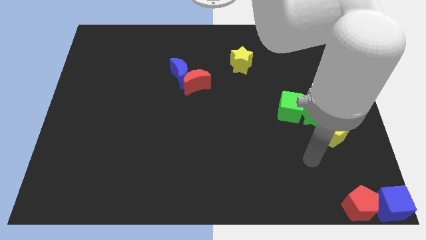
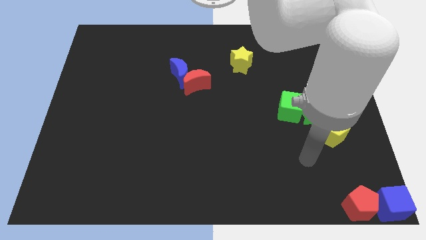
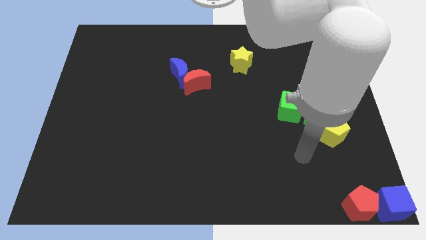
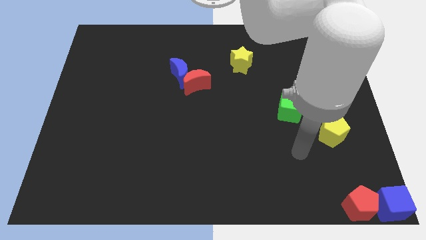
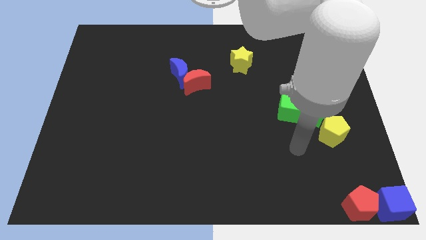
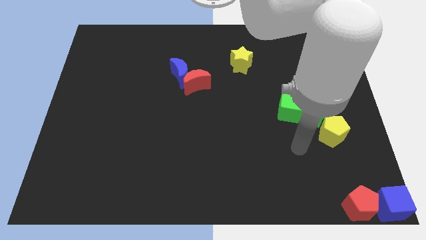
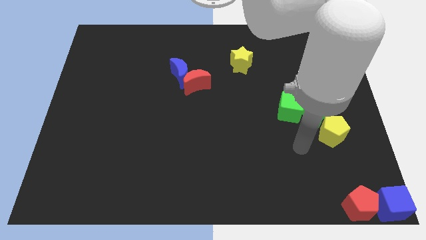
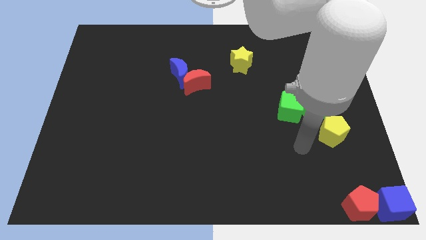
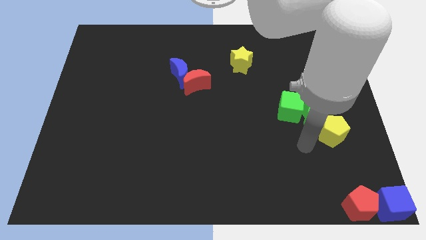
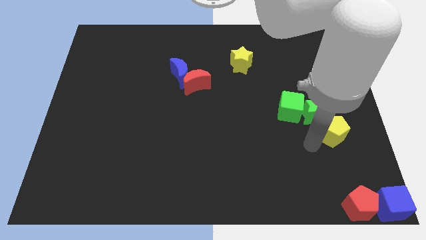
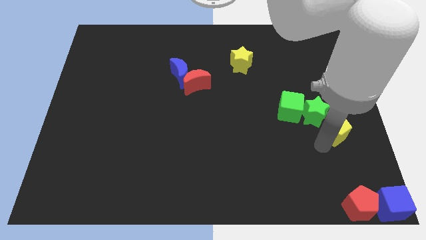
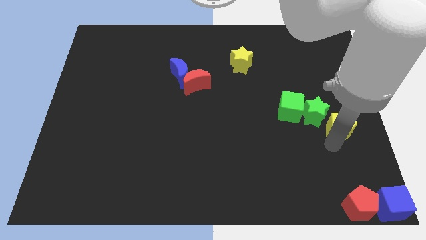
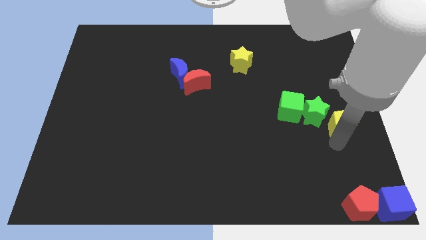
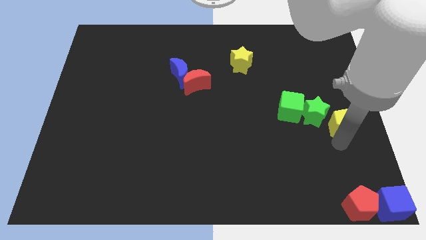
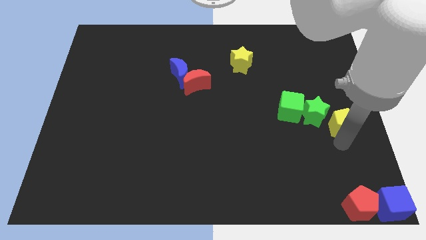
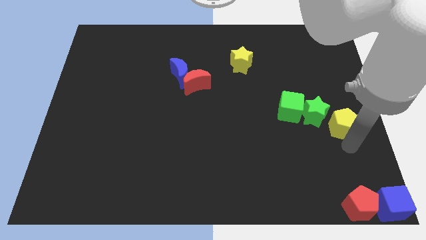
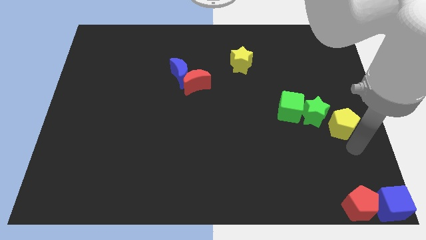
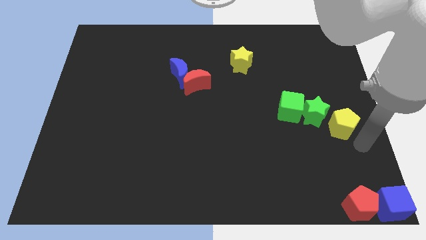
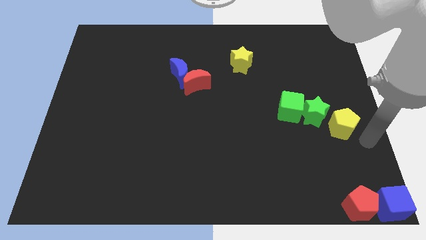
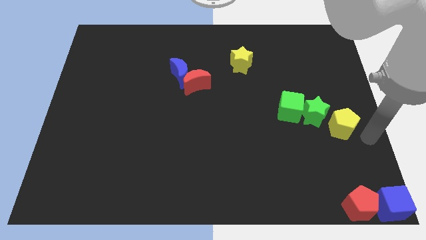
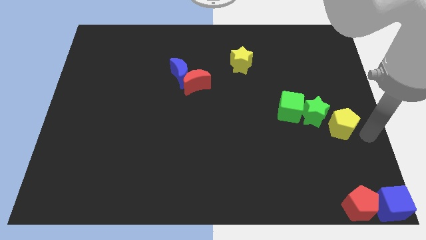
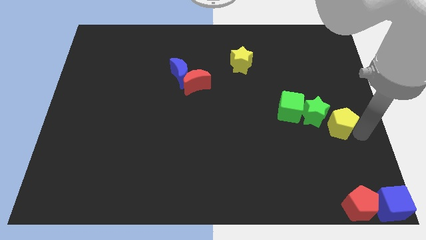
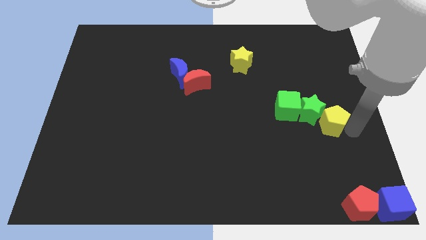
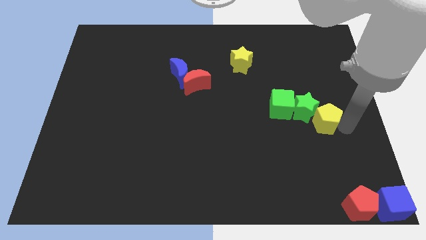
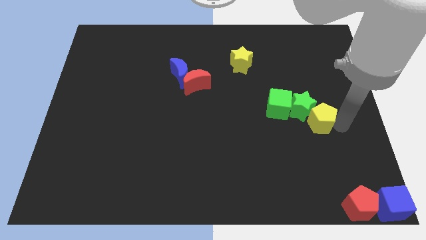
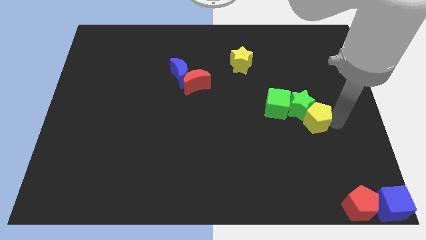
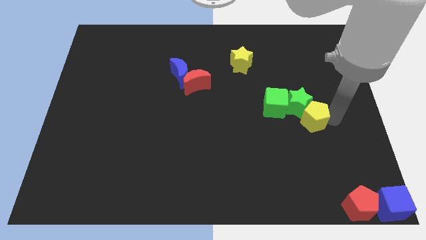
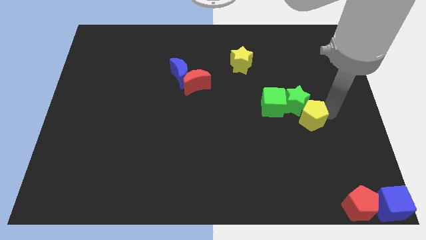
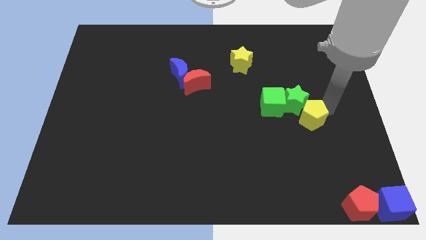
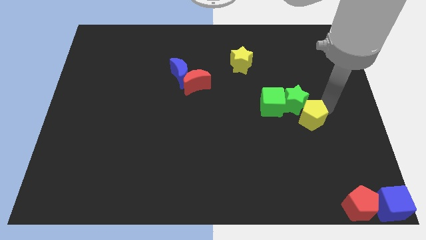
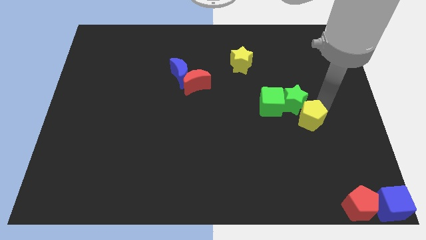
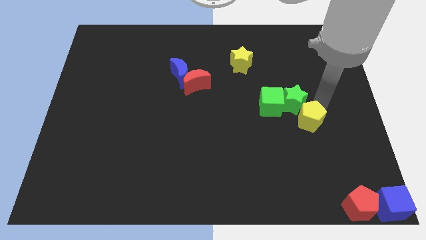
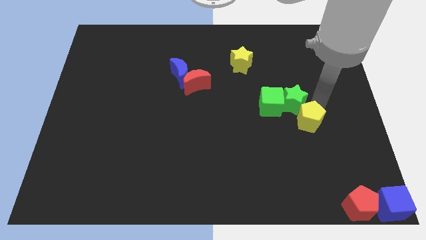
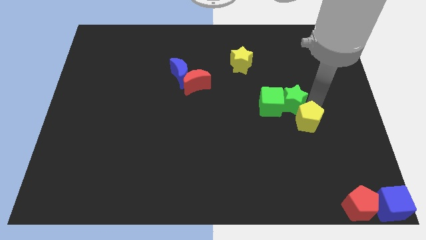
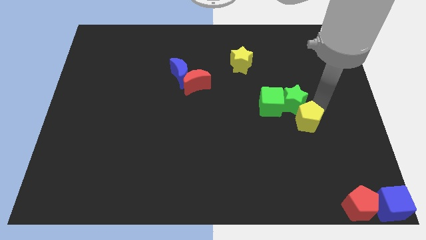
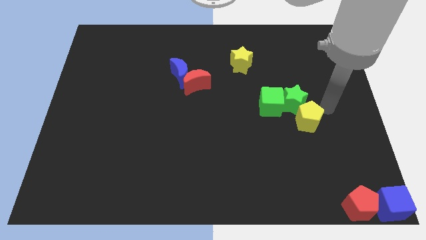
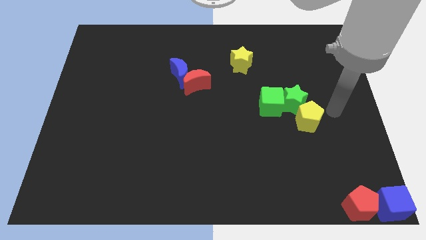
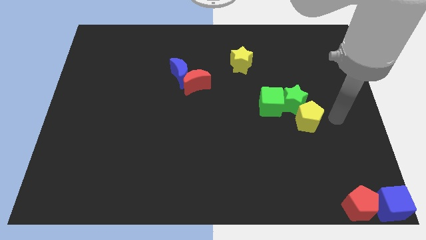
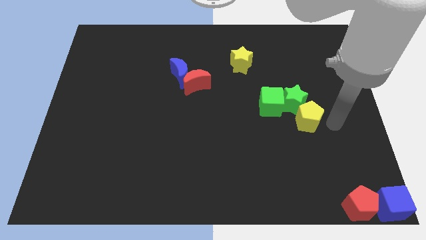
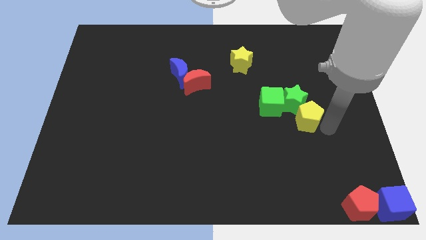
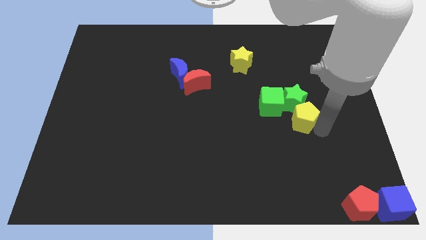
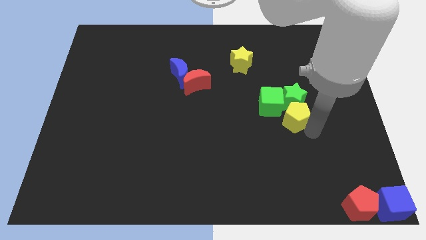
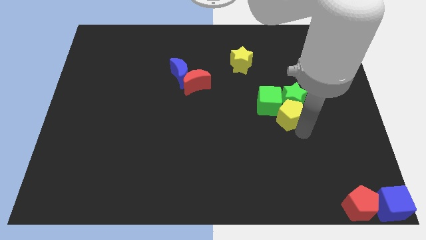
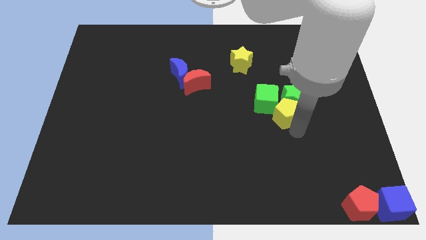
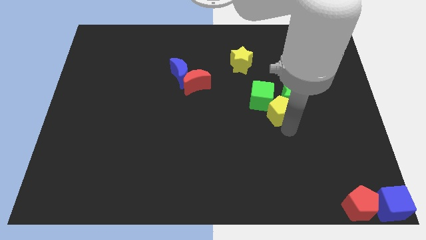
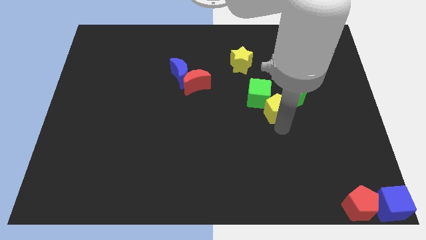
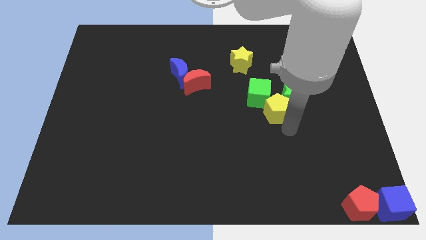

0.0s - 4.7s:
push a group of blocks towards the center

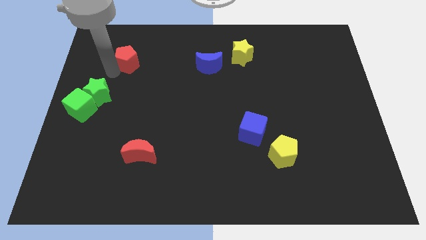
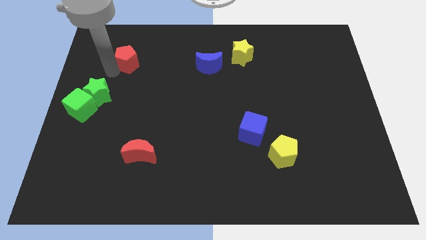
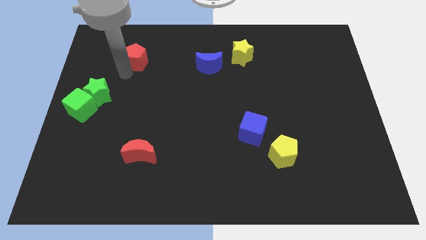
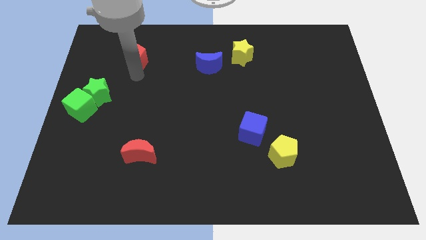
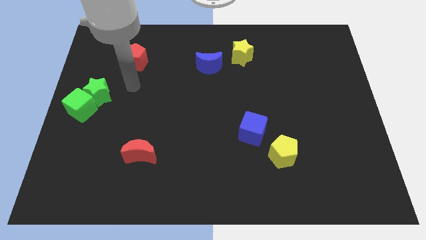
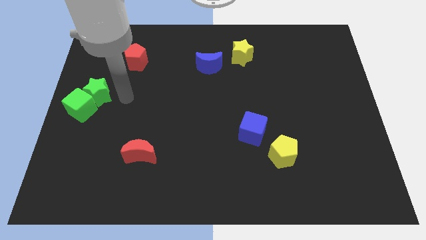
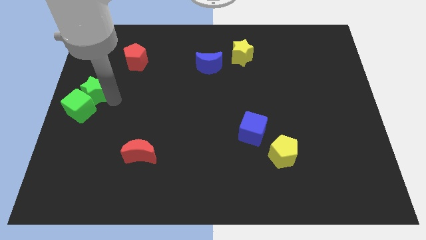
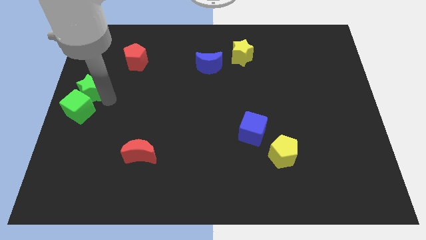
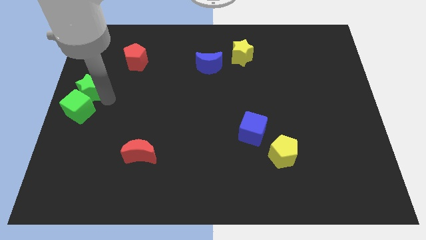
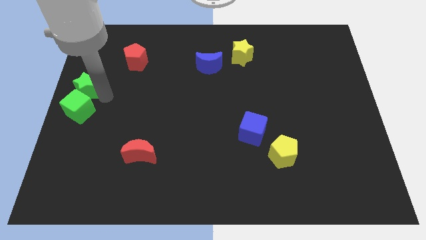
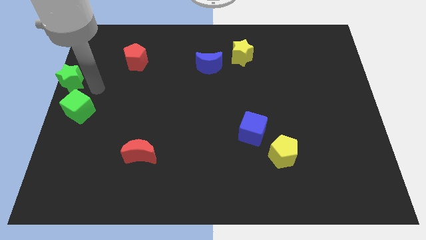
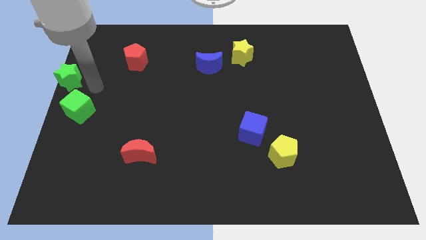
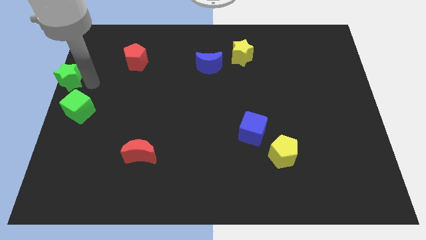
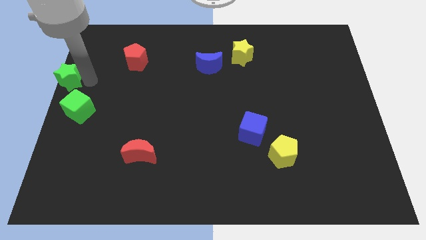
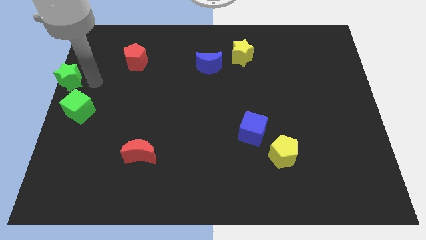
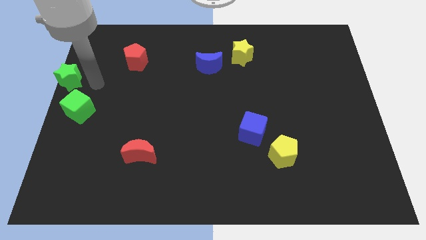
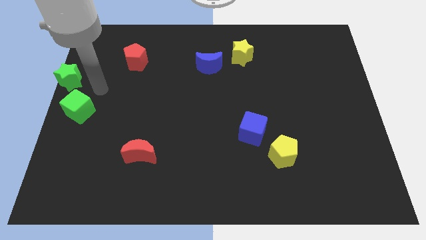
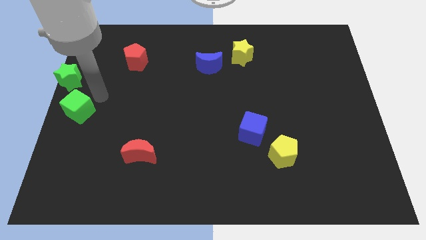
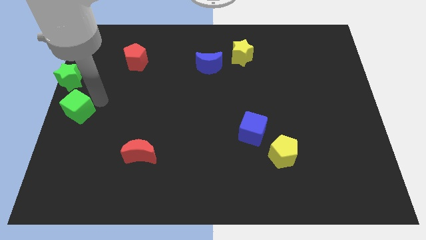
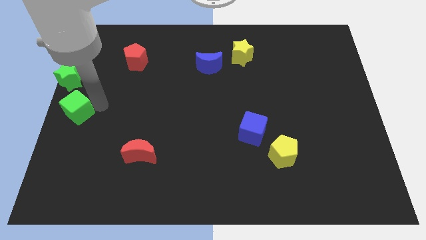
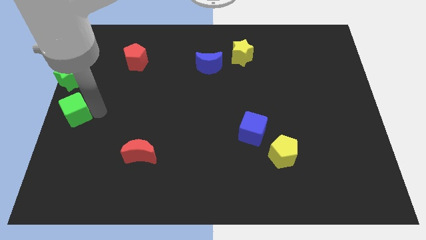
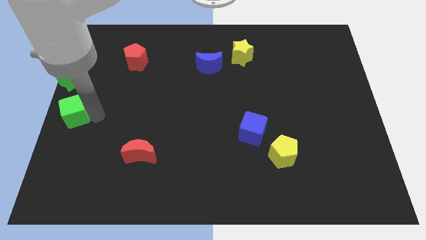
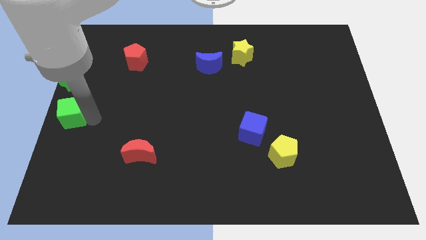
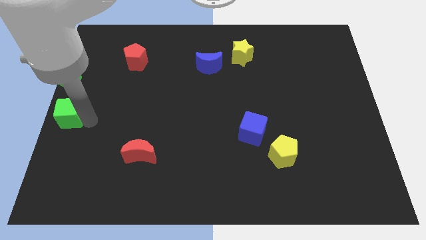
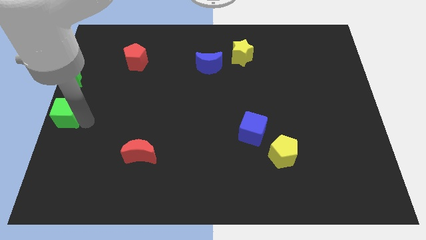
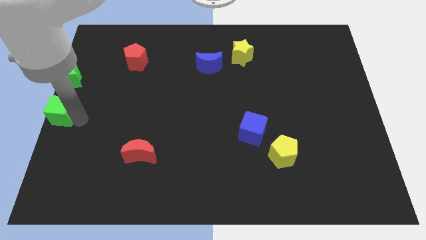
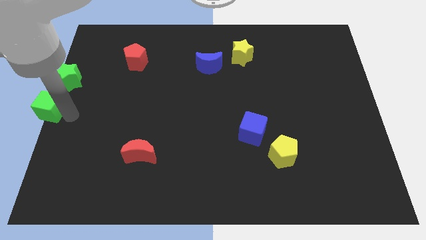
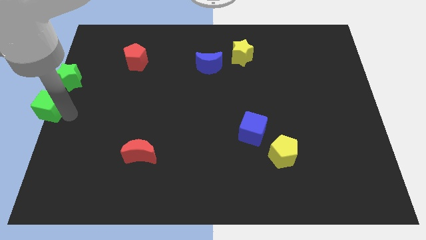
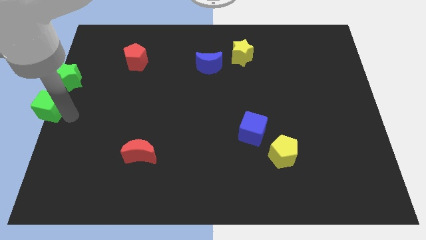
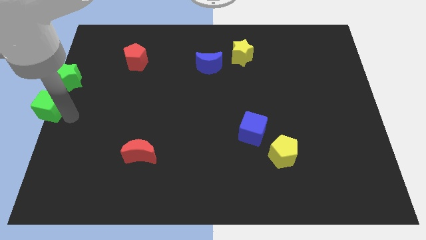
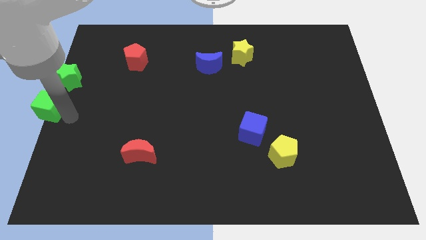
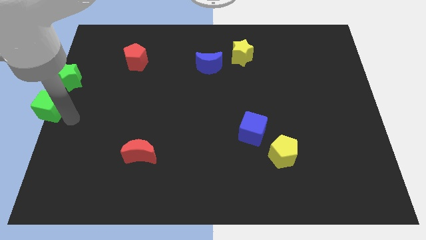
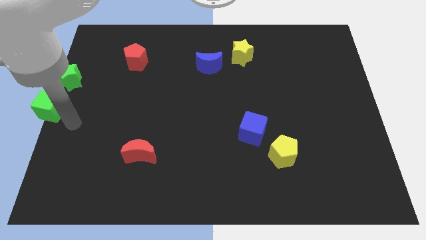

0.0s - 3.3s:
push the green cube and green star to center left of the board

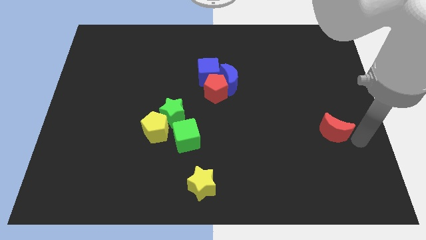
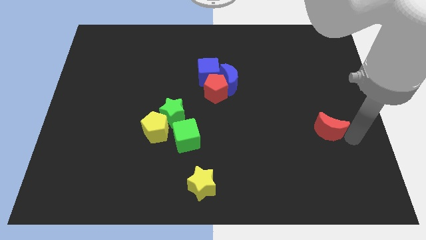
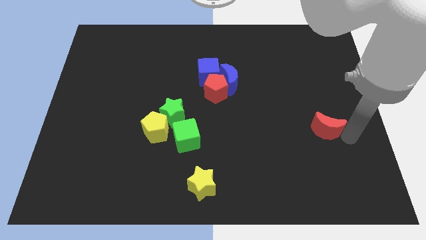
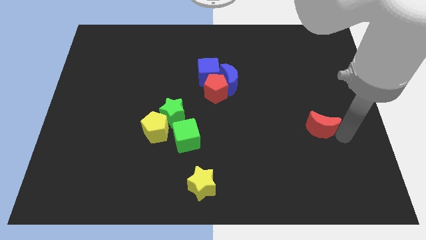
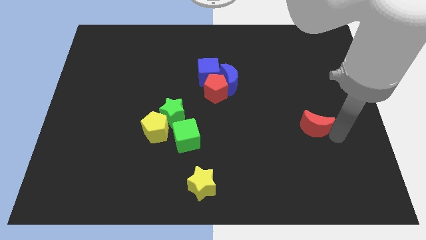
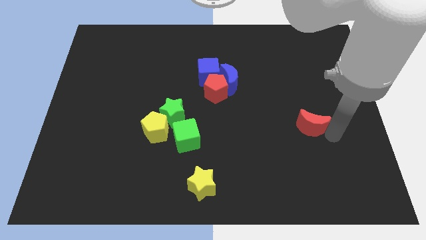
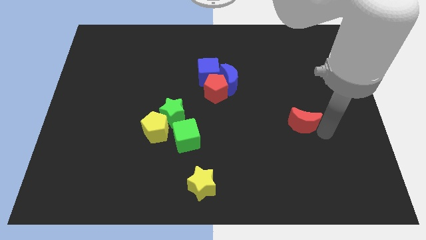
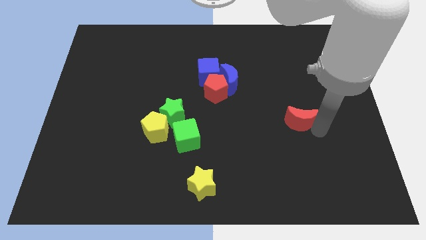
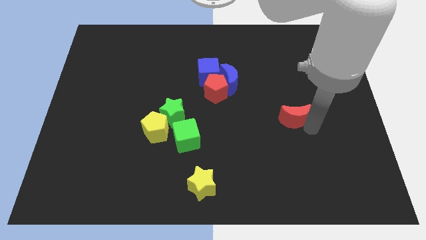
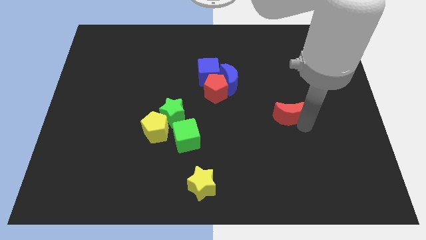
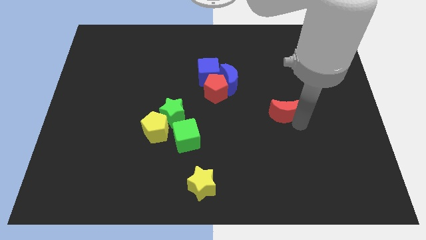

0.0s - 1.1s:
push red moon to the right of green star
